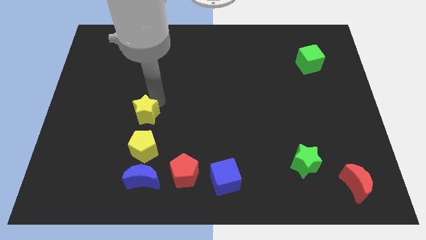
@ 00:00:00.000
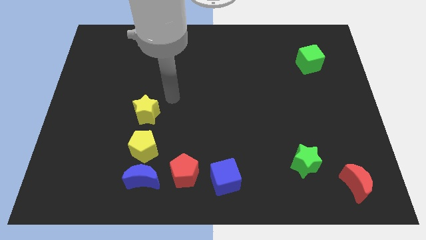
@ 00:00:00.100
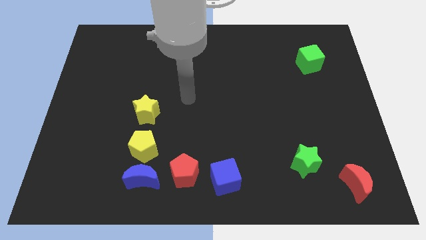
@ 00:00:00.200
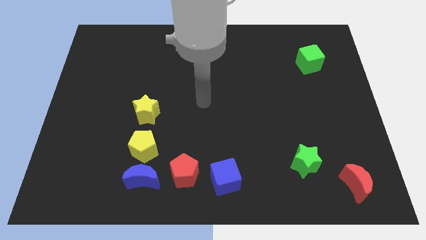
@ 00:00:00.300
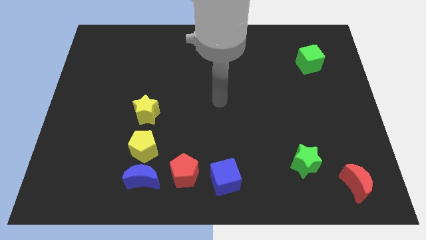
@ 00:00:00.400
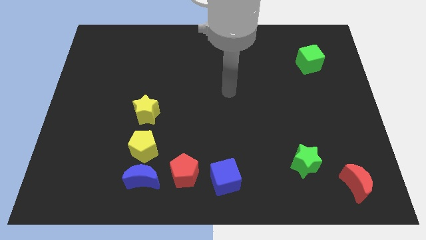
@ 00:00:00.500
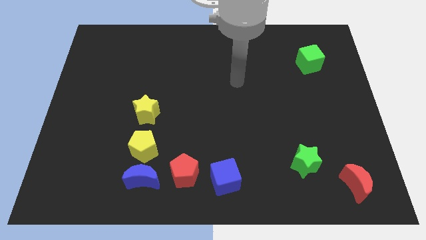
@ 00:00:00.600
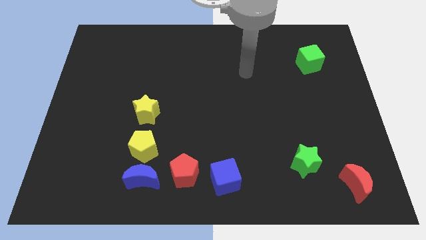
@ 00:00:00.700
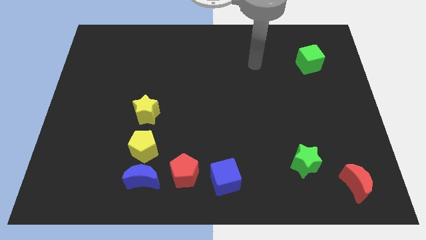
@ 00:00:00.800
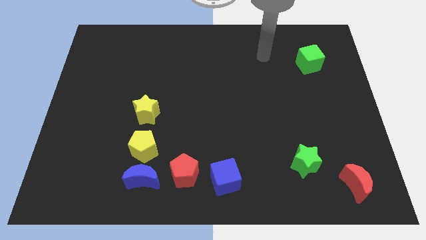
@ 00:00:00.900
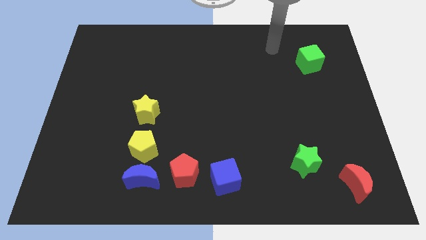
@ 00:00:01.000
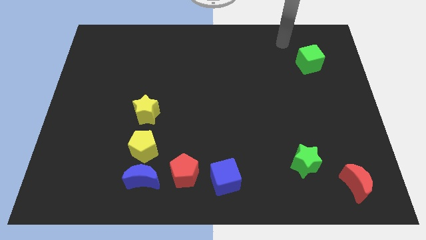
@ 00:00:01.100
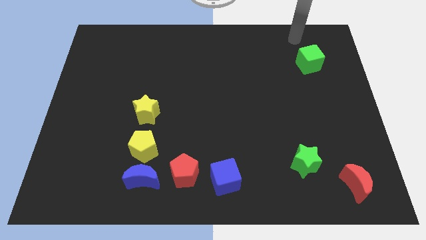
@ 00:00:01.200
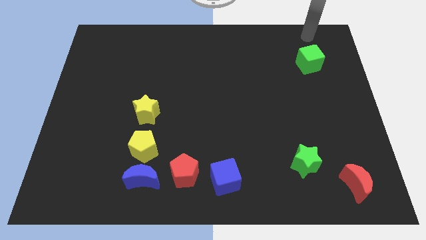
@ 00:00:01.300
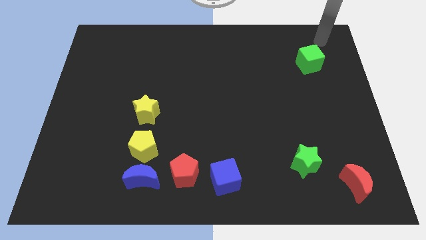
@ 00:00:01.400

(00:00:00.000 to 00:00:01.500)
move your arm away from the yellow star

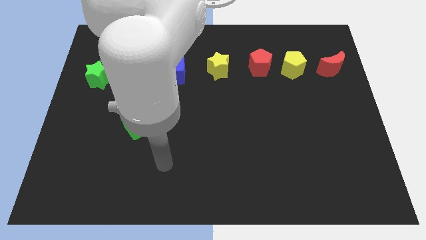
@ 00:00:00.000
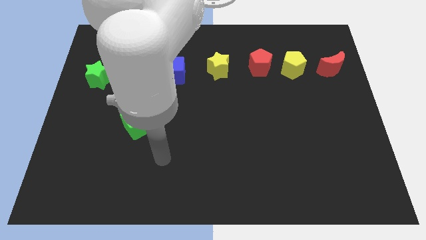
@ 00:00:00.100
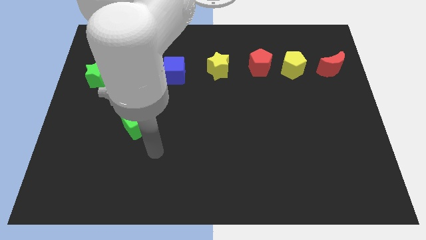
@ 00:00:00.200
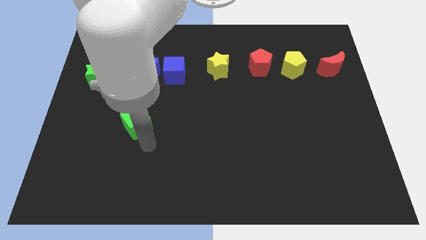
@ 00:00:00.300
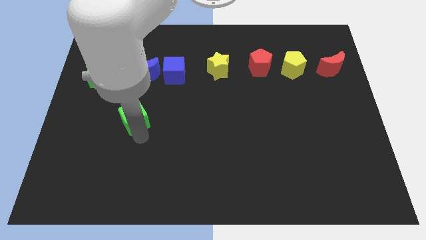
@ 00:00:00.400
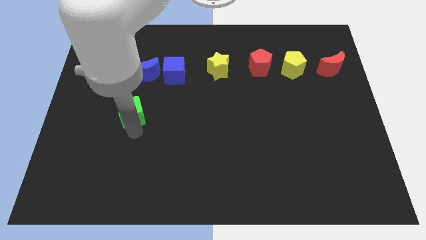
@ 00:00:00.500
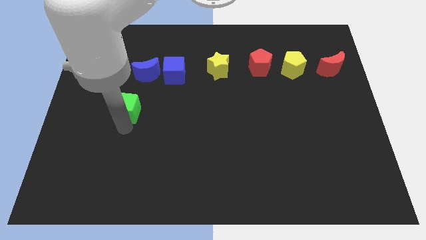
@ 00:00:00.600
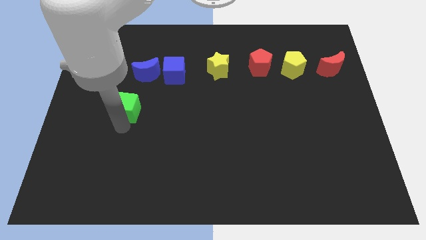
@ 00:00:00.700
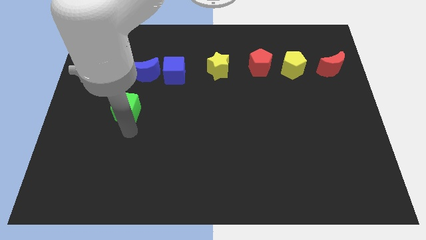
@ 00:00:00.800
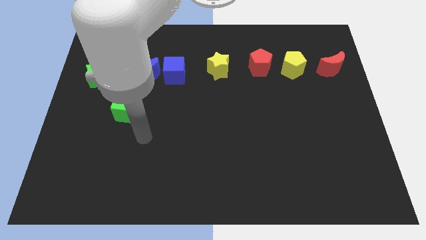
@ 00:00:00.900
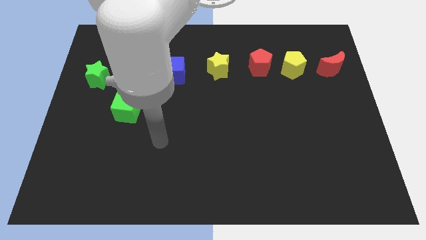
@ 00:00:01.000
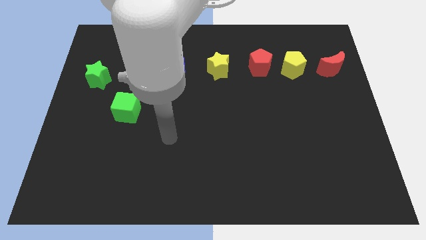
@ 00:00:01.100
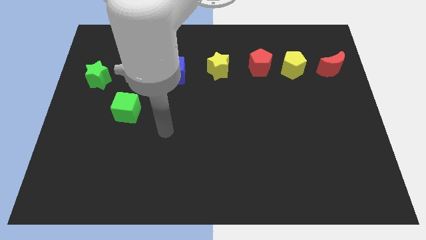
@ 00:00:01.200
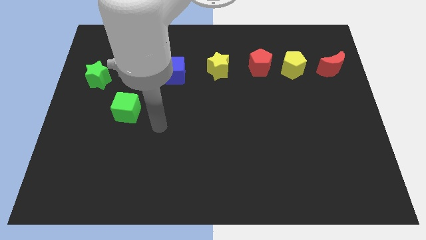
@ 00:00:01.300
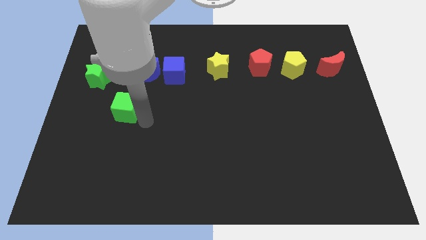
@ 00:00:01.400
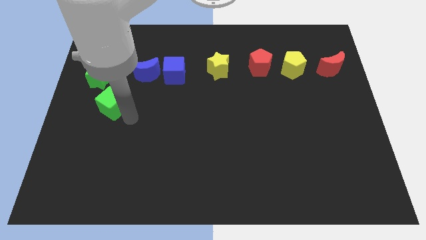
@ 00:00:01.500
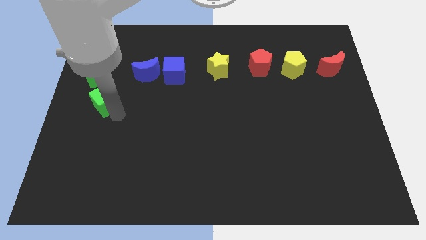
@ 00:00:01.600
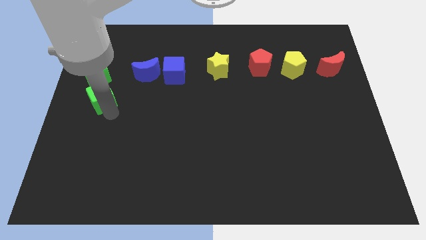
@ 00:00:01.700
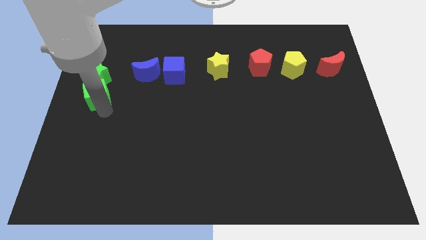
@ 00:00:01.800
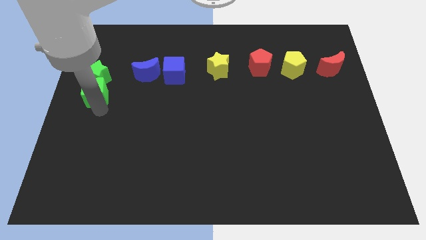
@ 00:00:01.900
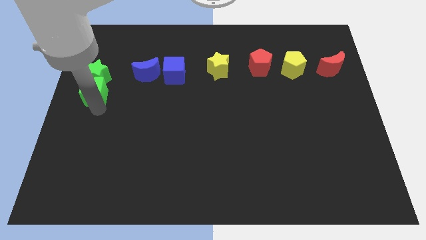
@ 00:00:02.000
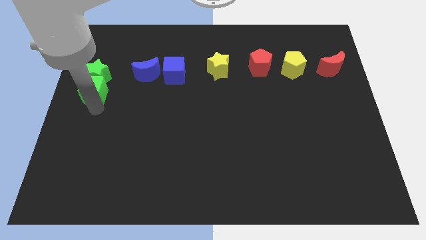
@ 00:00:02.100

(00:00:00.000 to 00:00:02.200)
push the green cube into the bottom side of the green star

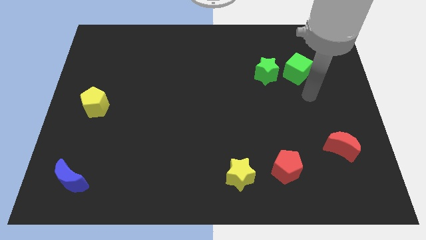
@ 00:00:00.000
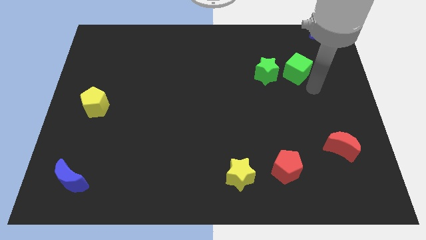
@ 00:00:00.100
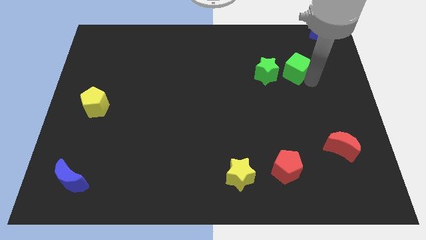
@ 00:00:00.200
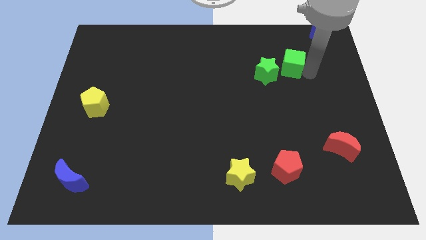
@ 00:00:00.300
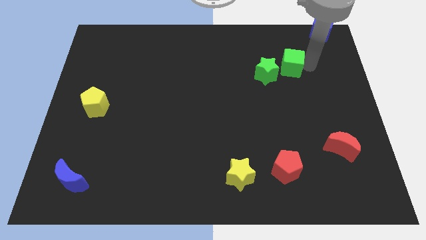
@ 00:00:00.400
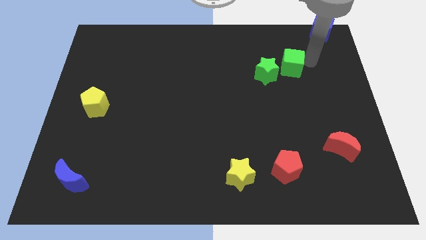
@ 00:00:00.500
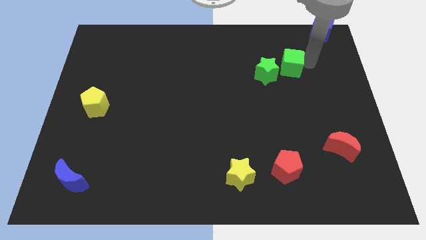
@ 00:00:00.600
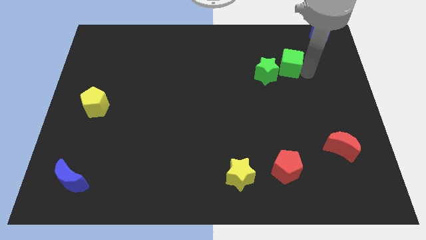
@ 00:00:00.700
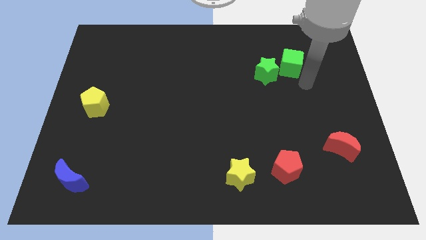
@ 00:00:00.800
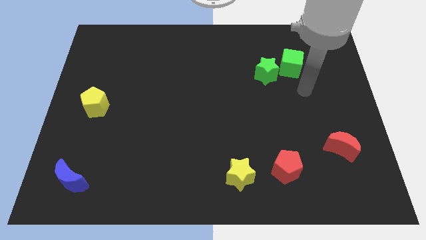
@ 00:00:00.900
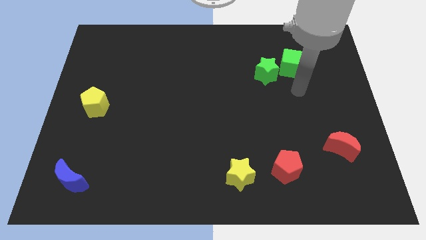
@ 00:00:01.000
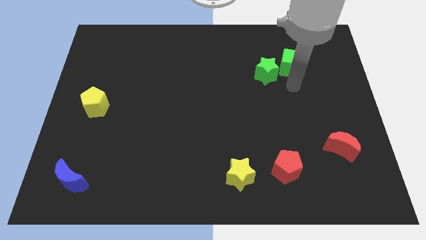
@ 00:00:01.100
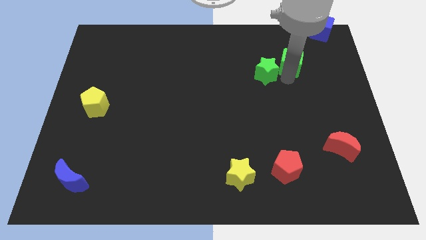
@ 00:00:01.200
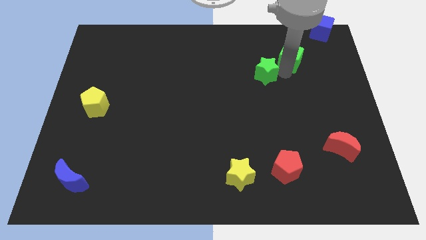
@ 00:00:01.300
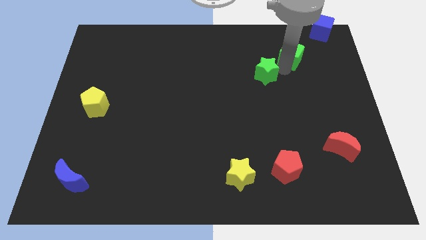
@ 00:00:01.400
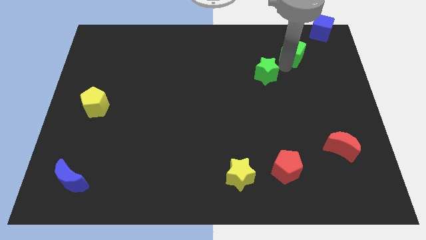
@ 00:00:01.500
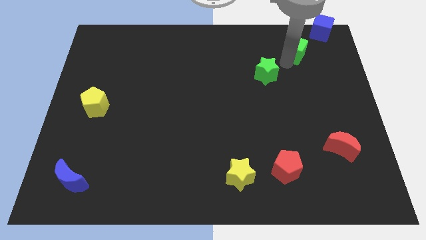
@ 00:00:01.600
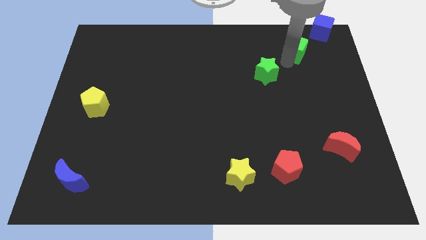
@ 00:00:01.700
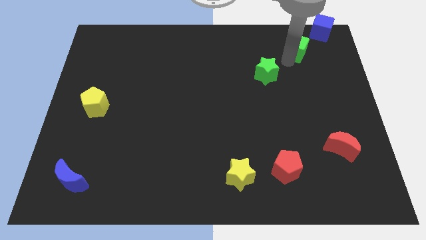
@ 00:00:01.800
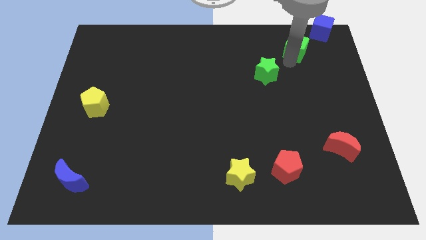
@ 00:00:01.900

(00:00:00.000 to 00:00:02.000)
put the green cube diagonally in between the green star and the blue cube

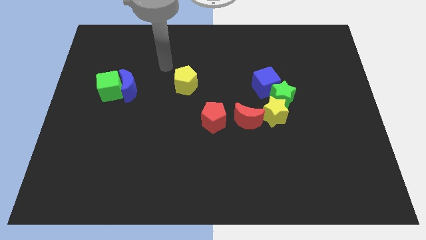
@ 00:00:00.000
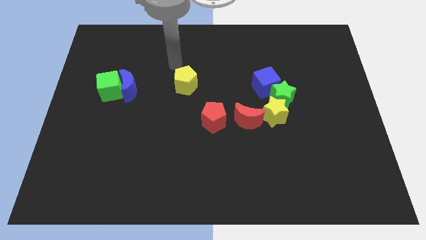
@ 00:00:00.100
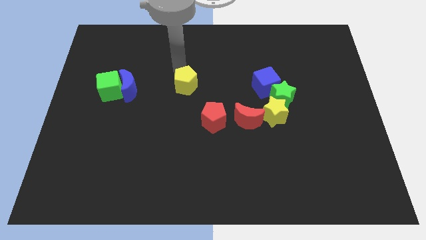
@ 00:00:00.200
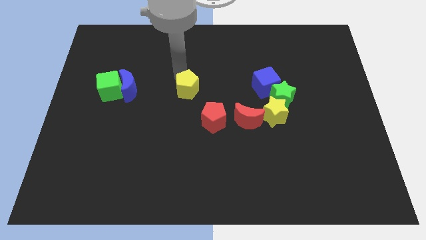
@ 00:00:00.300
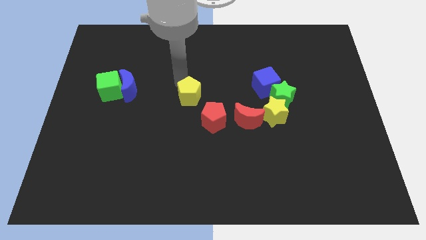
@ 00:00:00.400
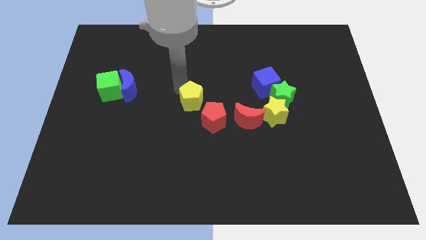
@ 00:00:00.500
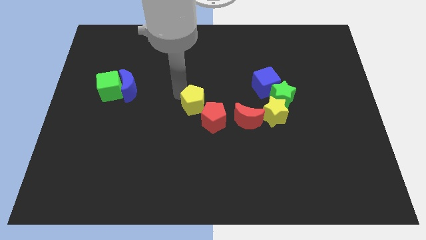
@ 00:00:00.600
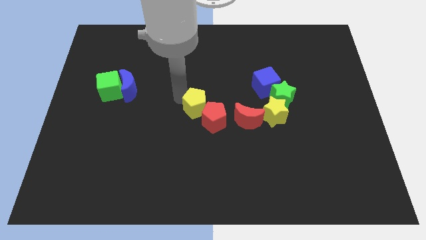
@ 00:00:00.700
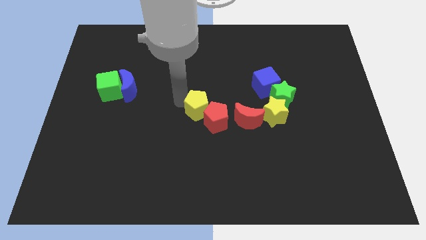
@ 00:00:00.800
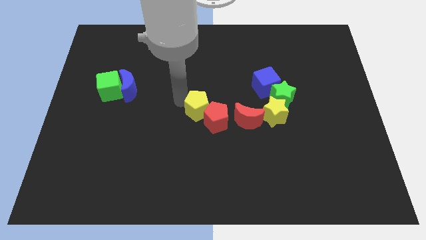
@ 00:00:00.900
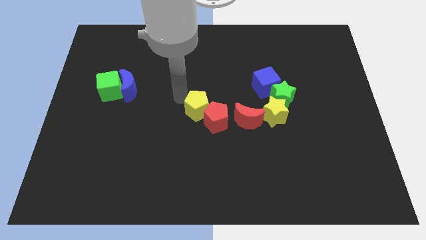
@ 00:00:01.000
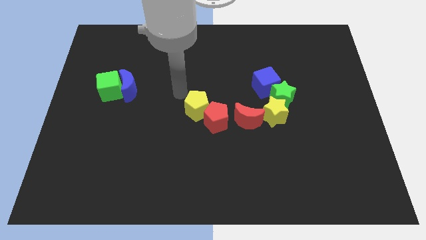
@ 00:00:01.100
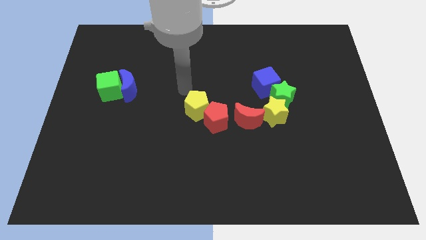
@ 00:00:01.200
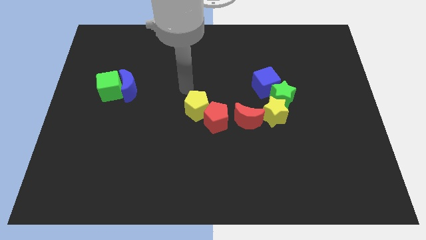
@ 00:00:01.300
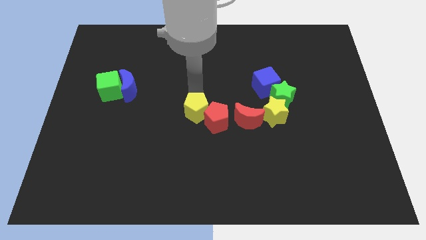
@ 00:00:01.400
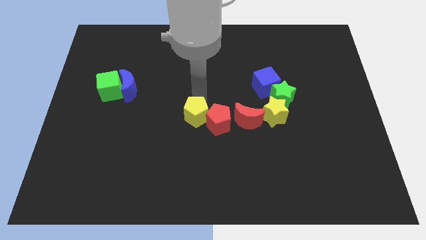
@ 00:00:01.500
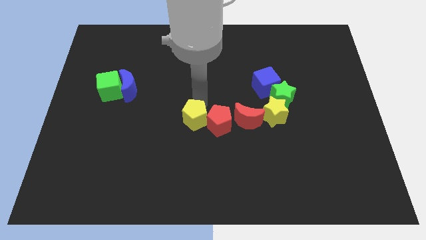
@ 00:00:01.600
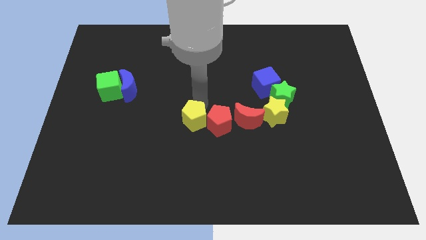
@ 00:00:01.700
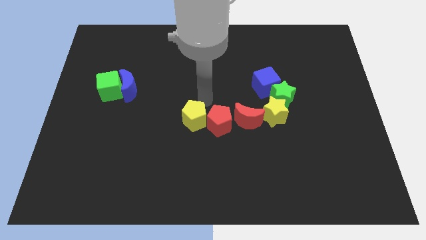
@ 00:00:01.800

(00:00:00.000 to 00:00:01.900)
put the yellow pentagon left to the red pentagon

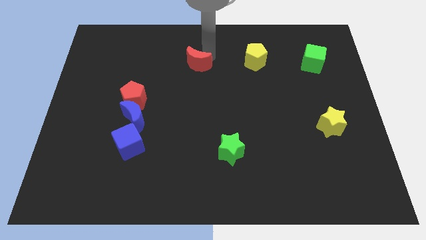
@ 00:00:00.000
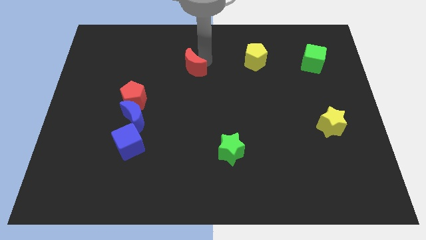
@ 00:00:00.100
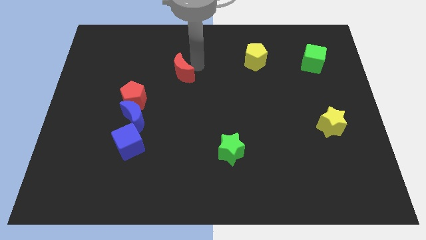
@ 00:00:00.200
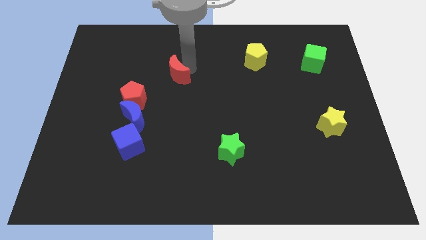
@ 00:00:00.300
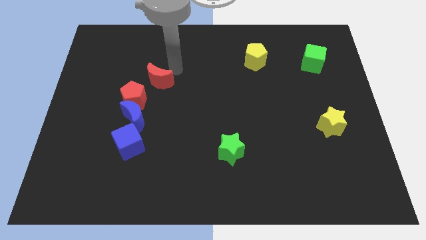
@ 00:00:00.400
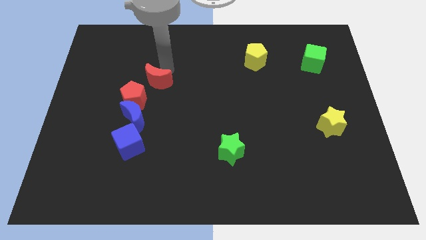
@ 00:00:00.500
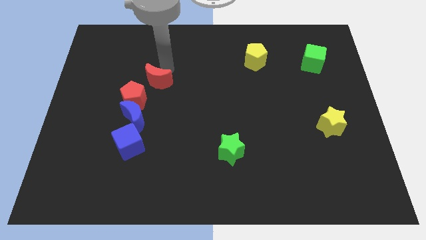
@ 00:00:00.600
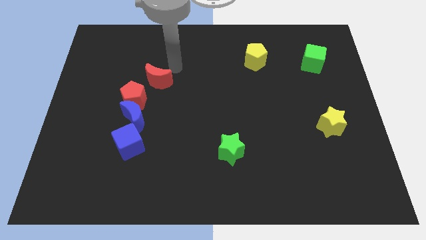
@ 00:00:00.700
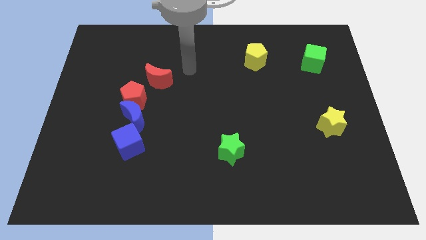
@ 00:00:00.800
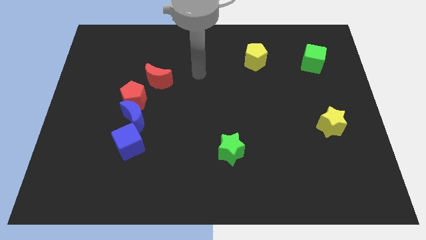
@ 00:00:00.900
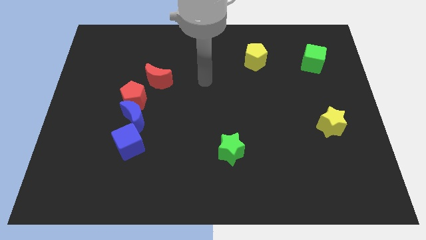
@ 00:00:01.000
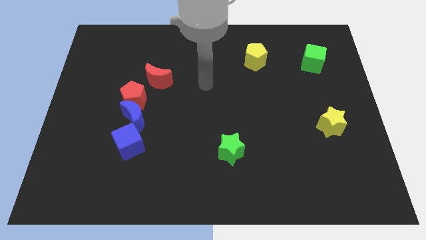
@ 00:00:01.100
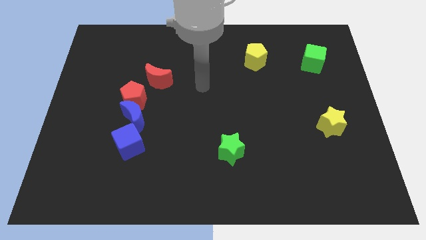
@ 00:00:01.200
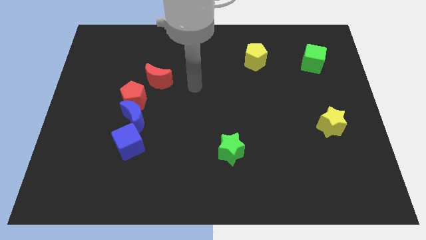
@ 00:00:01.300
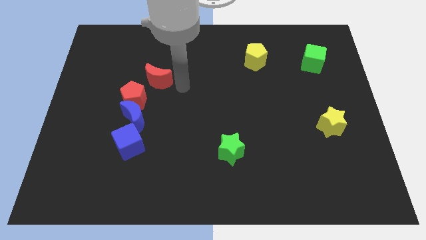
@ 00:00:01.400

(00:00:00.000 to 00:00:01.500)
push the red crescent towards the red pentagon
